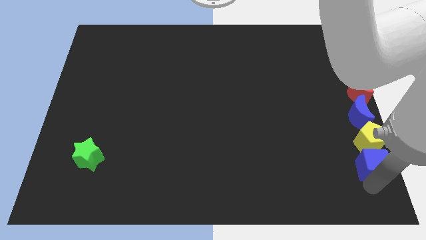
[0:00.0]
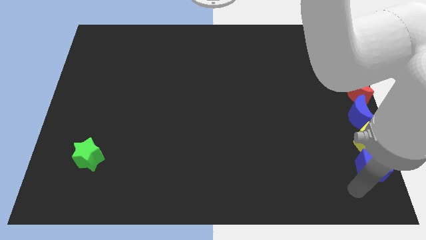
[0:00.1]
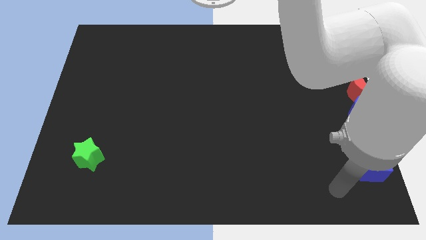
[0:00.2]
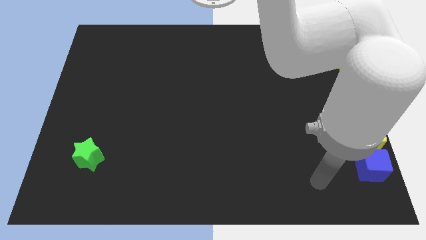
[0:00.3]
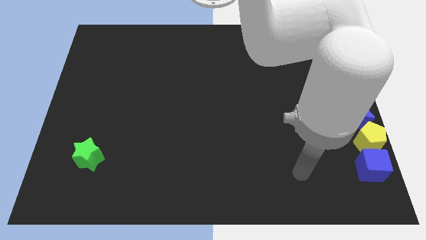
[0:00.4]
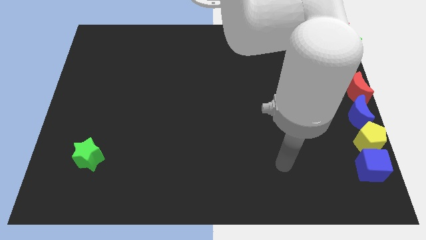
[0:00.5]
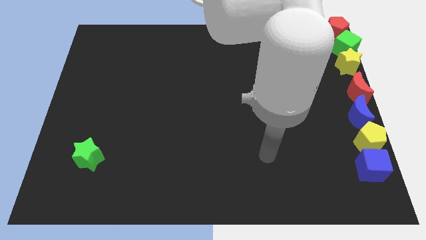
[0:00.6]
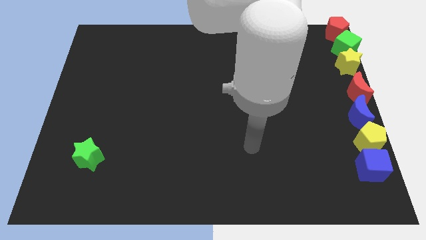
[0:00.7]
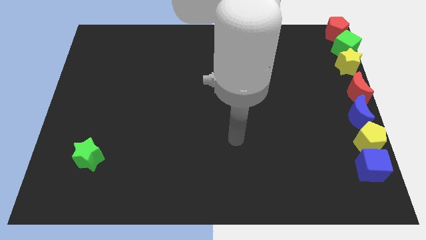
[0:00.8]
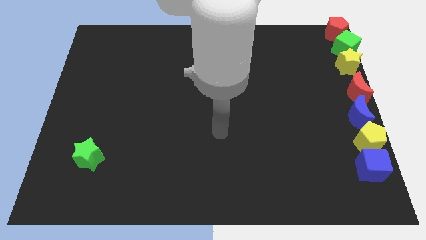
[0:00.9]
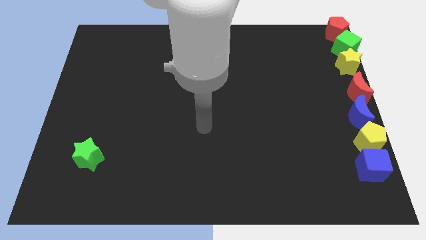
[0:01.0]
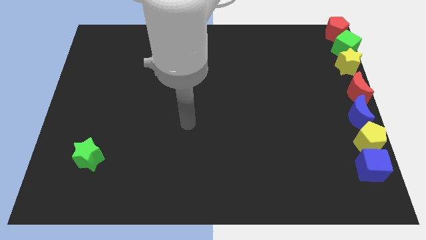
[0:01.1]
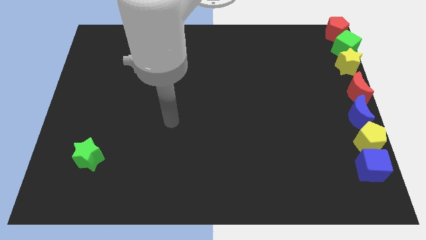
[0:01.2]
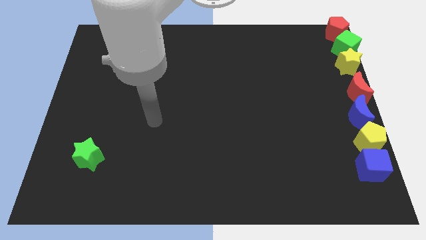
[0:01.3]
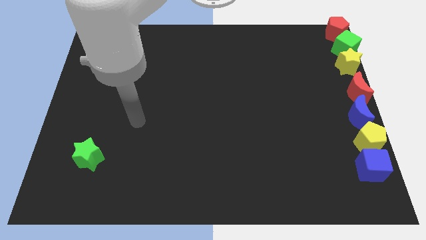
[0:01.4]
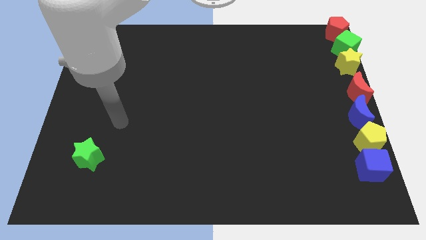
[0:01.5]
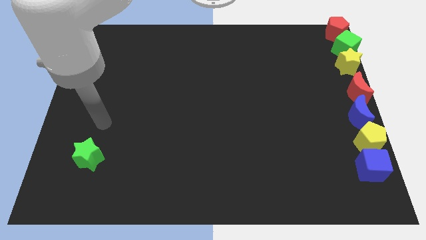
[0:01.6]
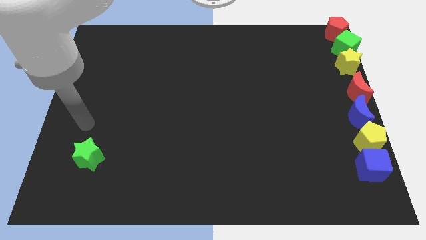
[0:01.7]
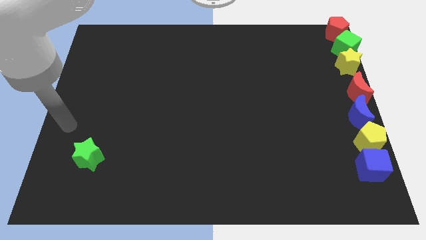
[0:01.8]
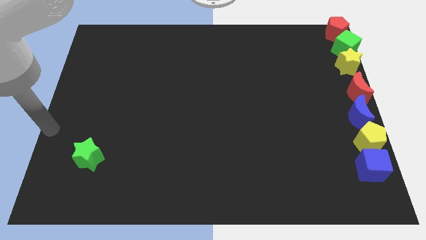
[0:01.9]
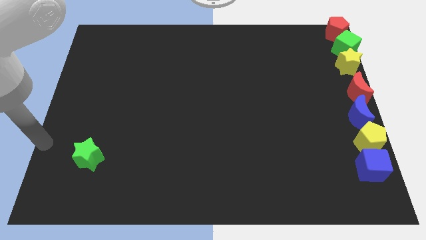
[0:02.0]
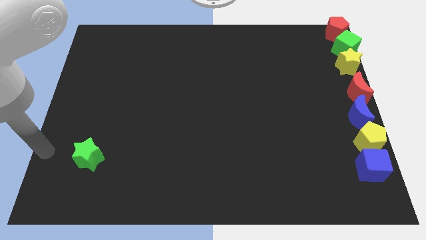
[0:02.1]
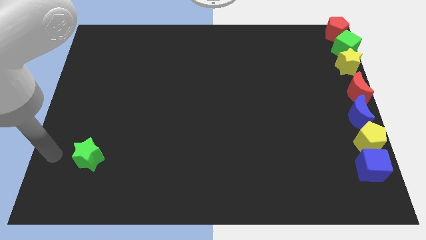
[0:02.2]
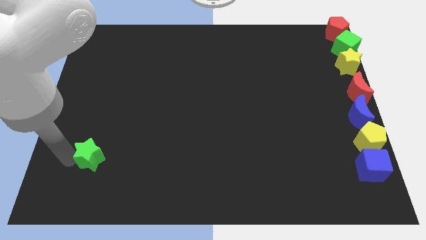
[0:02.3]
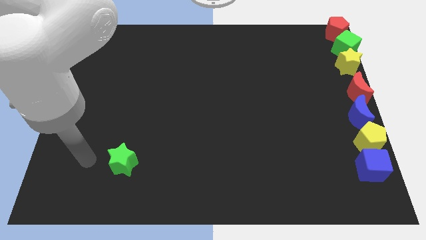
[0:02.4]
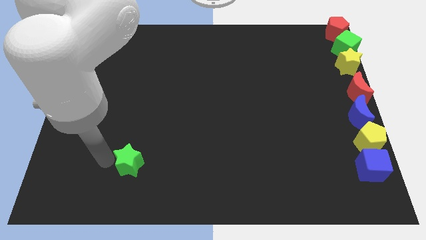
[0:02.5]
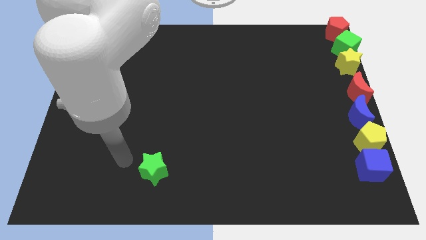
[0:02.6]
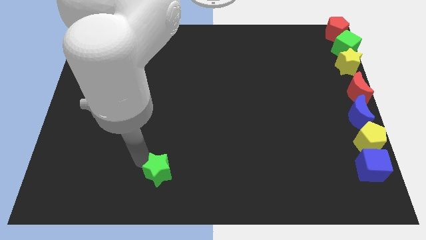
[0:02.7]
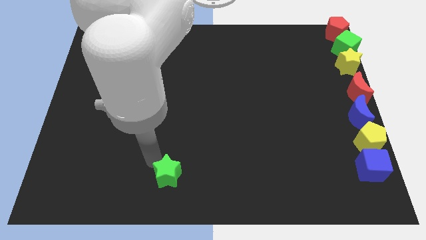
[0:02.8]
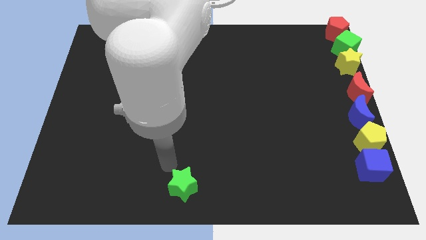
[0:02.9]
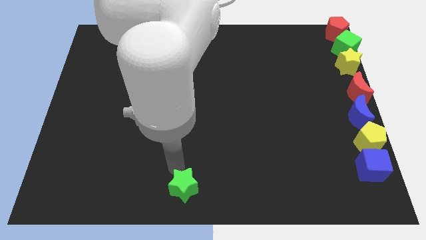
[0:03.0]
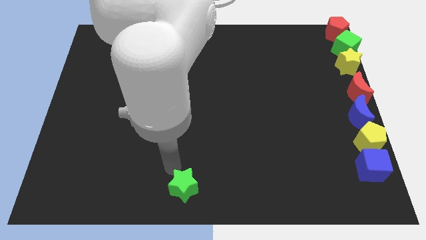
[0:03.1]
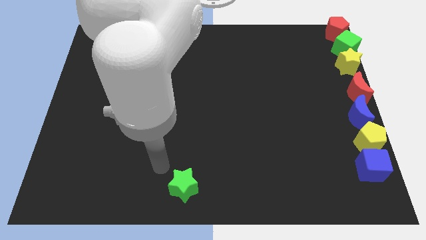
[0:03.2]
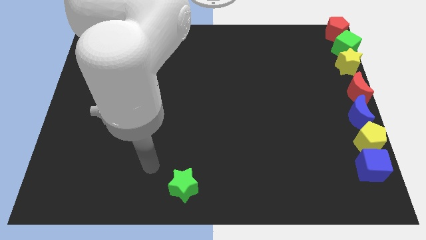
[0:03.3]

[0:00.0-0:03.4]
push green star slightly towards down

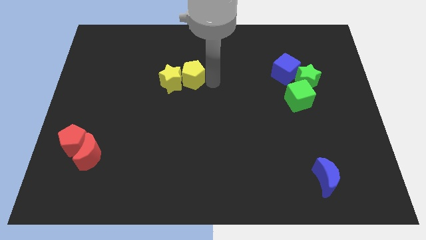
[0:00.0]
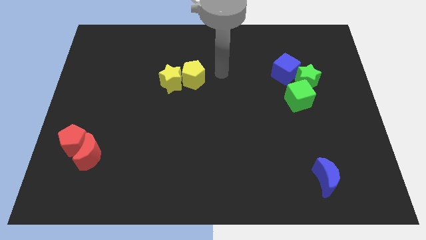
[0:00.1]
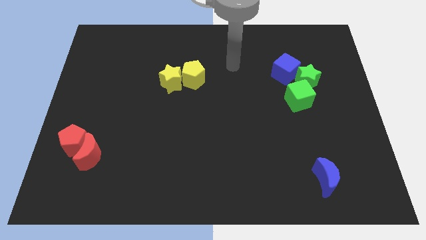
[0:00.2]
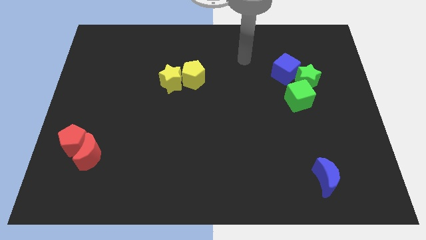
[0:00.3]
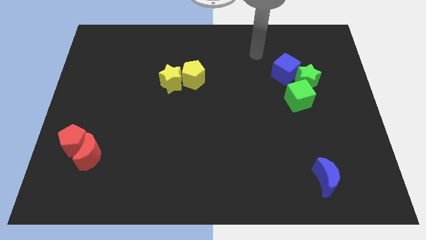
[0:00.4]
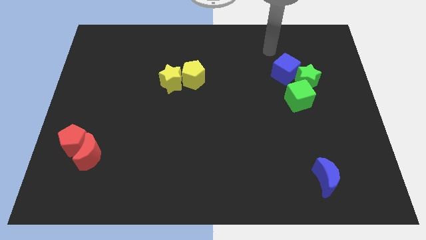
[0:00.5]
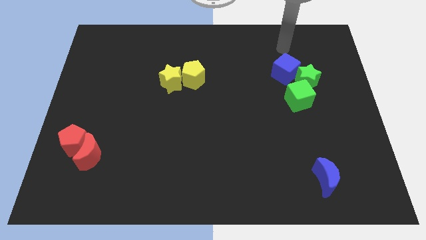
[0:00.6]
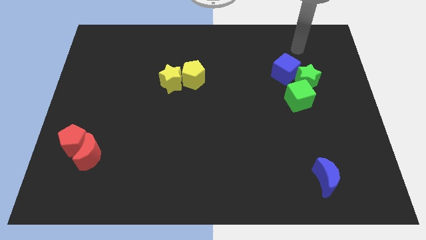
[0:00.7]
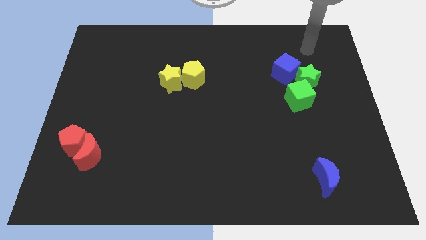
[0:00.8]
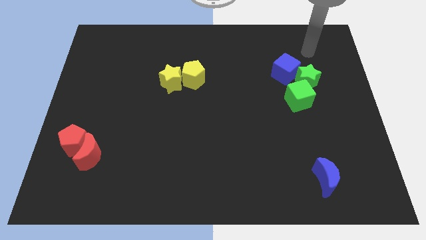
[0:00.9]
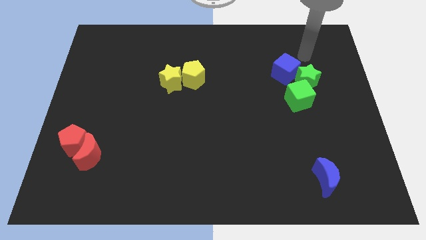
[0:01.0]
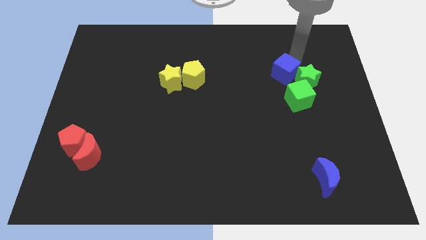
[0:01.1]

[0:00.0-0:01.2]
move your arm away from the yellow pentagon

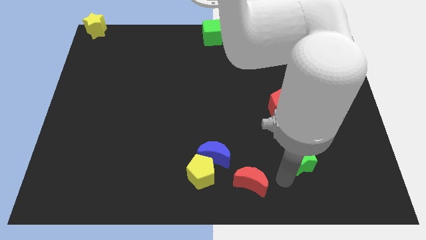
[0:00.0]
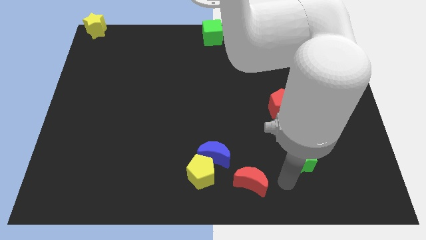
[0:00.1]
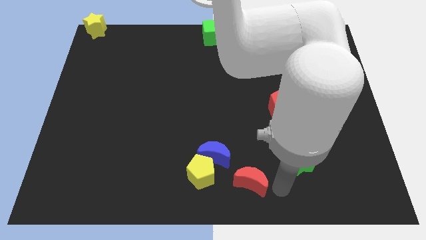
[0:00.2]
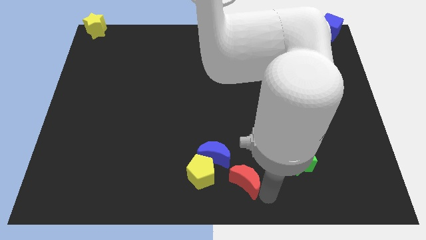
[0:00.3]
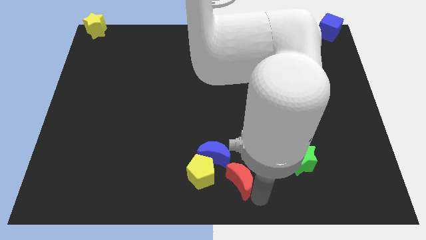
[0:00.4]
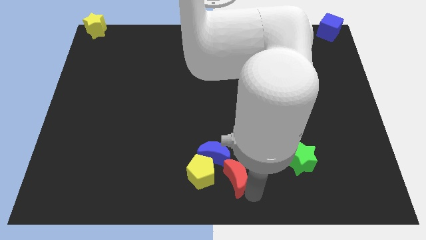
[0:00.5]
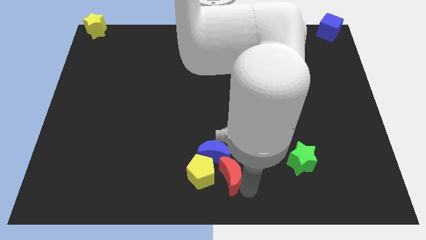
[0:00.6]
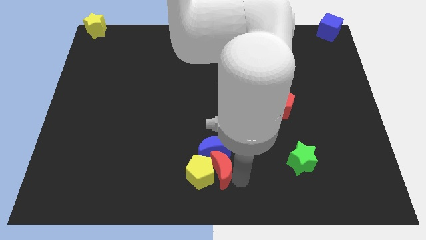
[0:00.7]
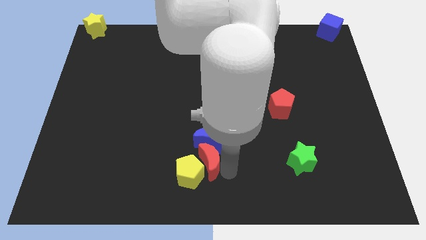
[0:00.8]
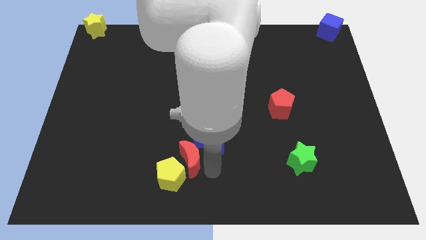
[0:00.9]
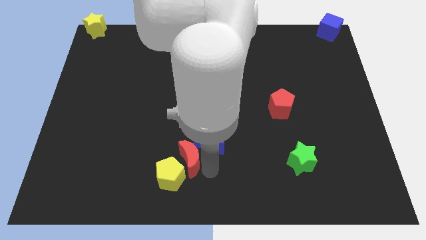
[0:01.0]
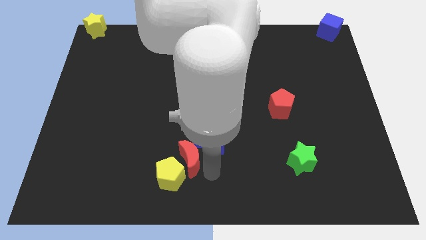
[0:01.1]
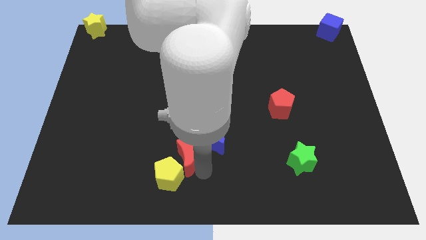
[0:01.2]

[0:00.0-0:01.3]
place red moon between yellow pentagon and blue moon

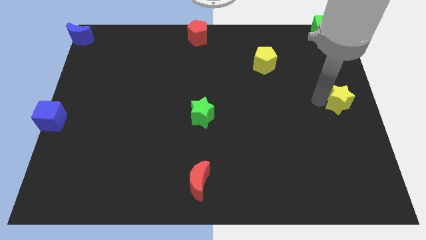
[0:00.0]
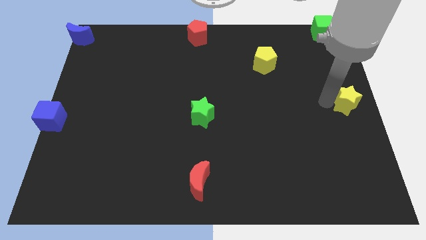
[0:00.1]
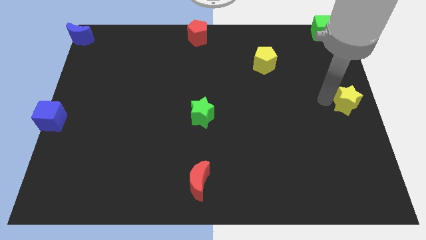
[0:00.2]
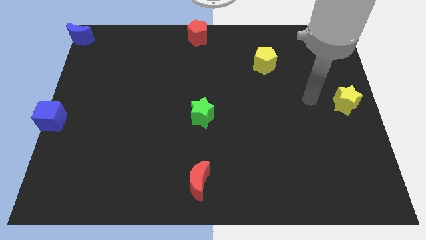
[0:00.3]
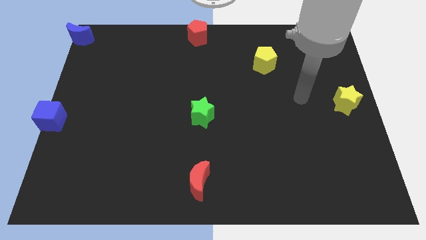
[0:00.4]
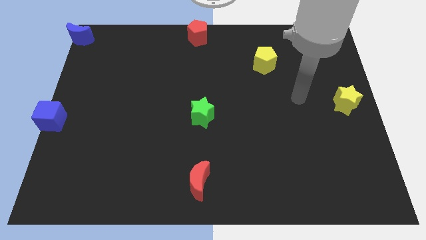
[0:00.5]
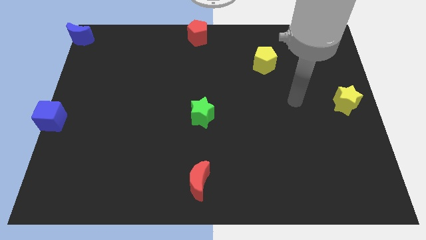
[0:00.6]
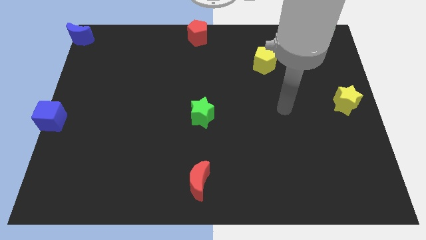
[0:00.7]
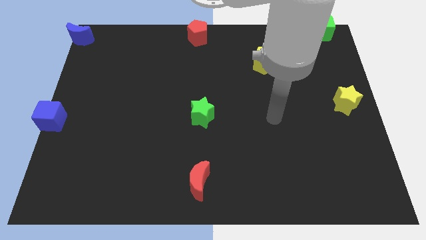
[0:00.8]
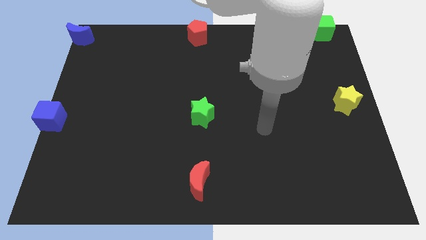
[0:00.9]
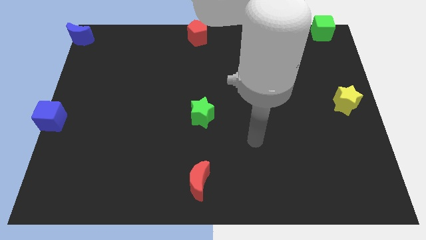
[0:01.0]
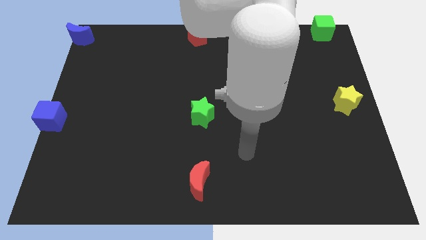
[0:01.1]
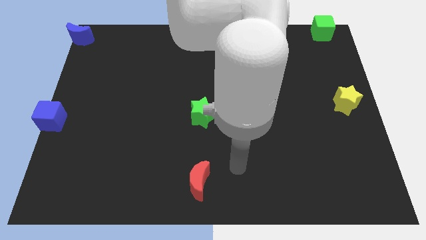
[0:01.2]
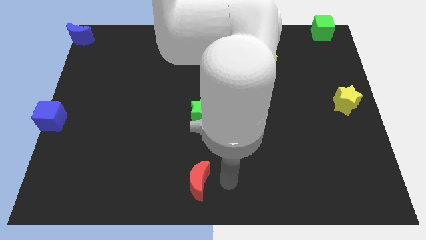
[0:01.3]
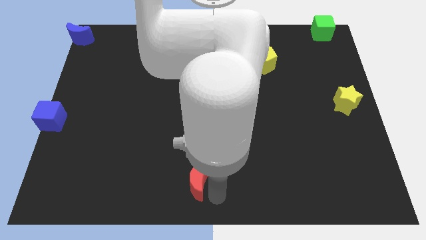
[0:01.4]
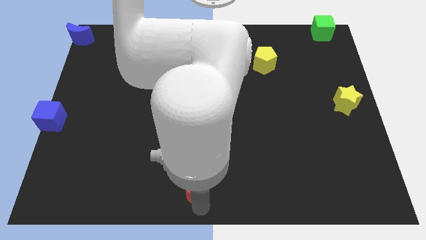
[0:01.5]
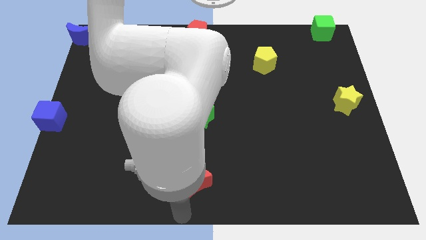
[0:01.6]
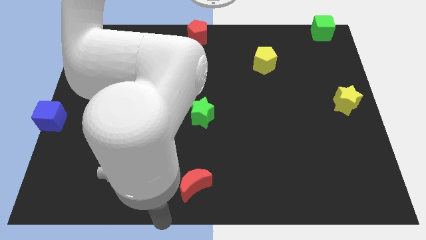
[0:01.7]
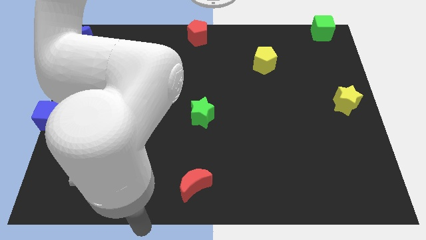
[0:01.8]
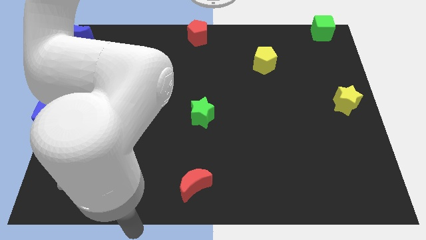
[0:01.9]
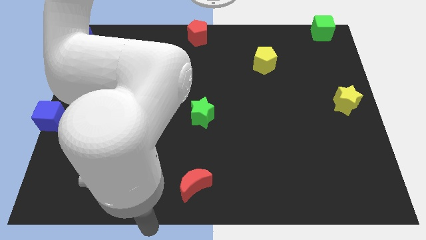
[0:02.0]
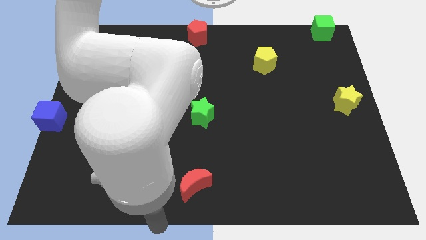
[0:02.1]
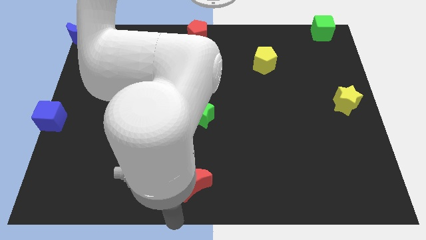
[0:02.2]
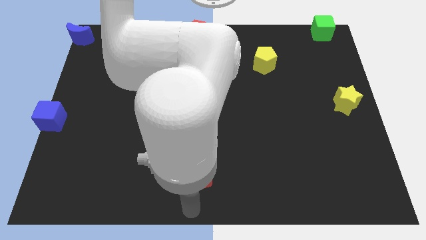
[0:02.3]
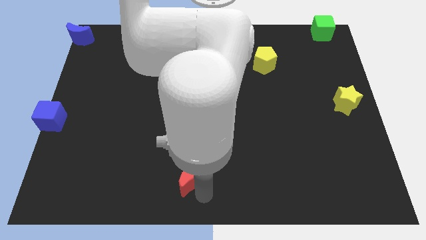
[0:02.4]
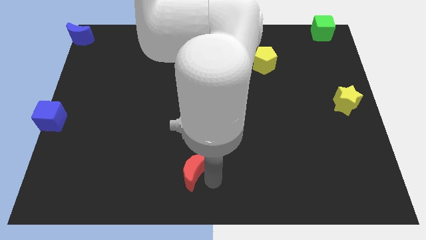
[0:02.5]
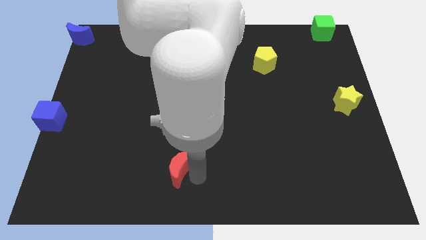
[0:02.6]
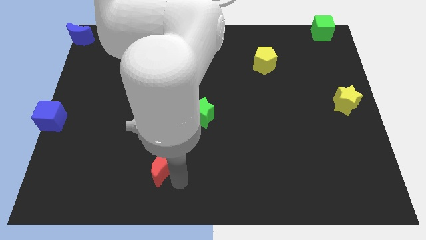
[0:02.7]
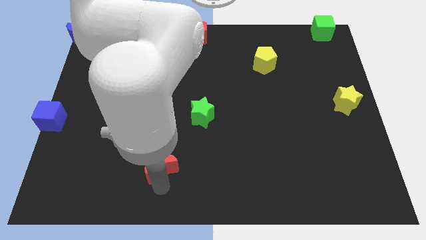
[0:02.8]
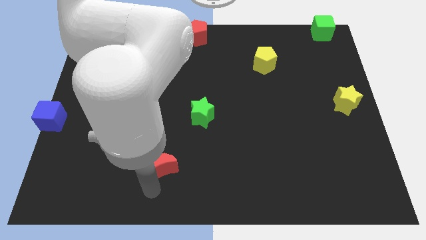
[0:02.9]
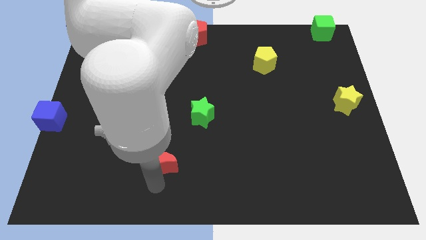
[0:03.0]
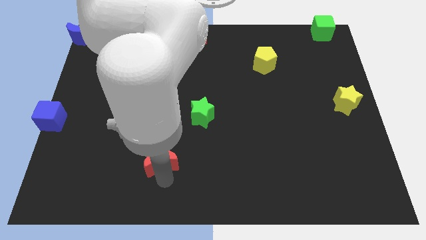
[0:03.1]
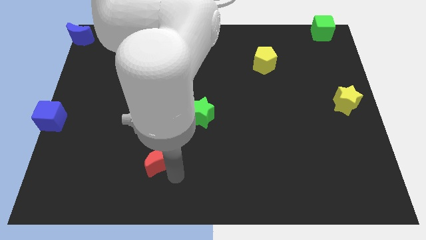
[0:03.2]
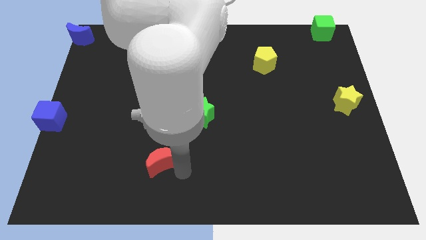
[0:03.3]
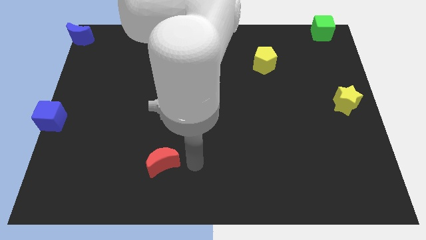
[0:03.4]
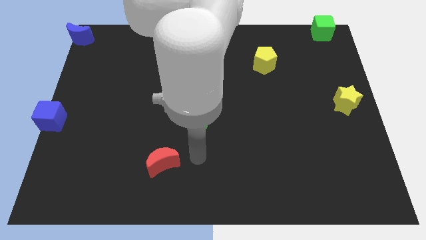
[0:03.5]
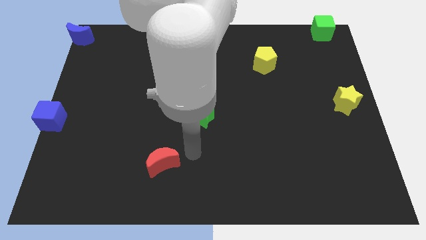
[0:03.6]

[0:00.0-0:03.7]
move the red moon to the bottom left of the board
